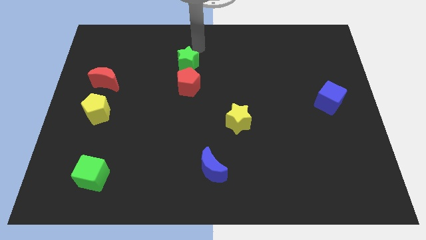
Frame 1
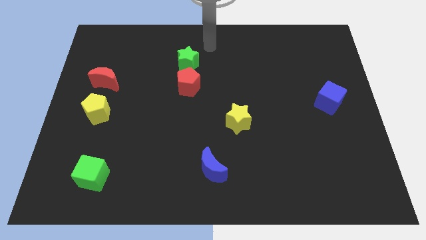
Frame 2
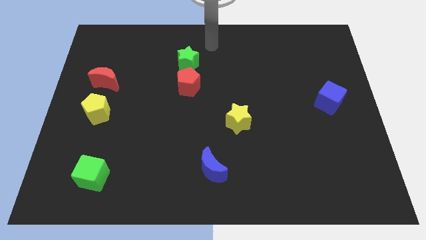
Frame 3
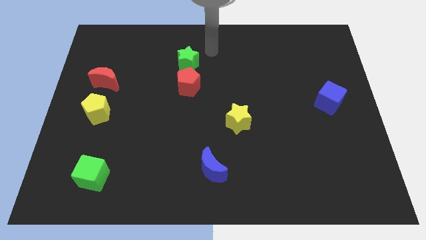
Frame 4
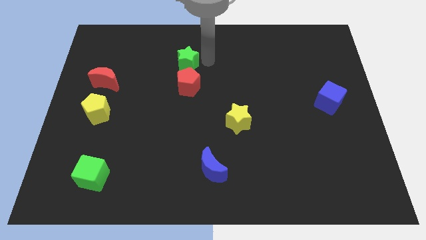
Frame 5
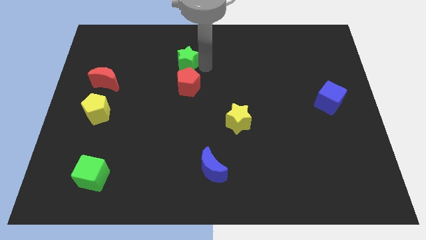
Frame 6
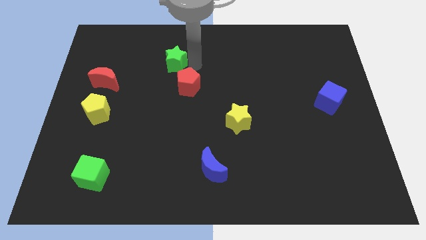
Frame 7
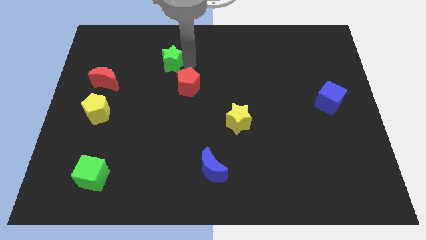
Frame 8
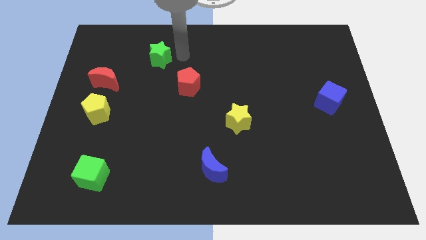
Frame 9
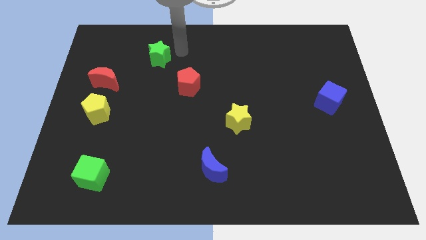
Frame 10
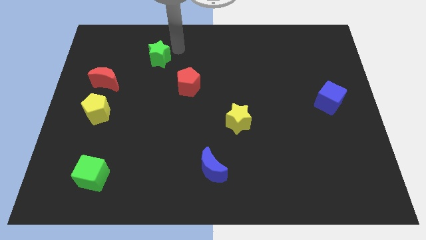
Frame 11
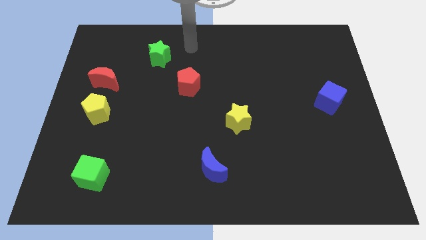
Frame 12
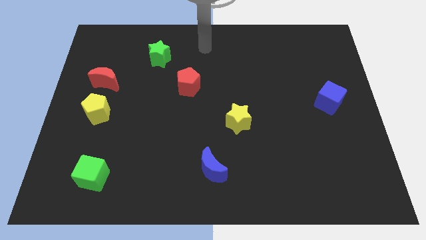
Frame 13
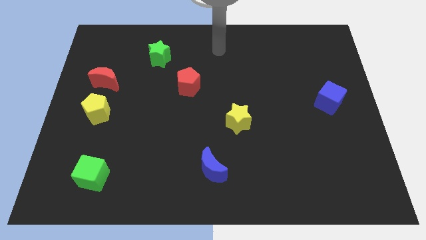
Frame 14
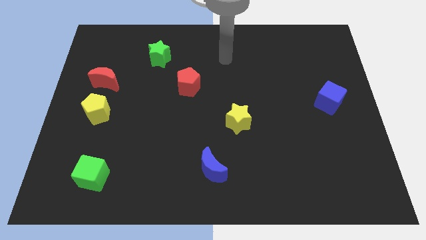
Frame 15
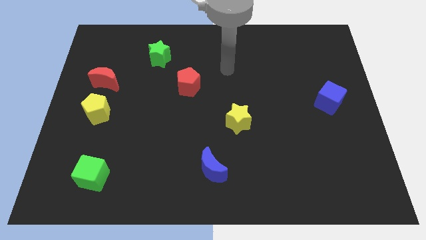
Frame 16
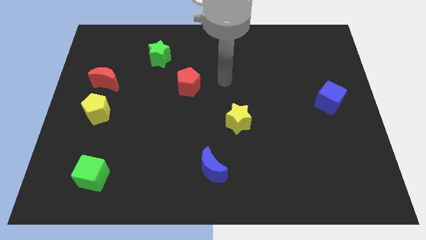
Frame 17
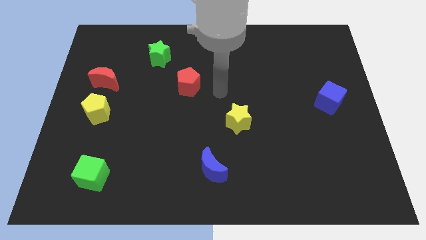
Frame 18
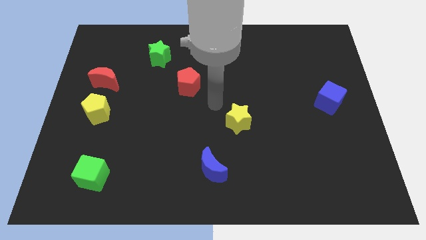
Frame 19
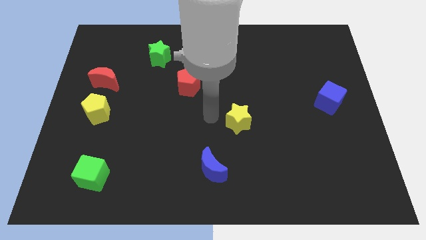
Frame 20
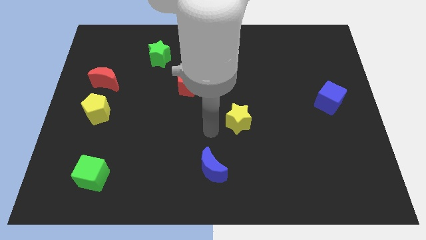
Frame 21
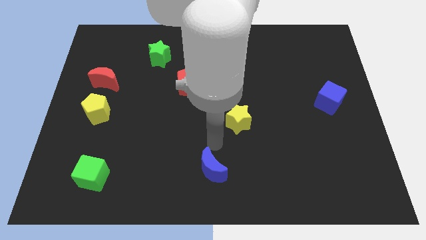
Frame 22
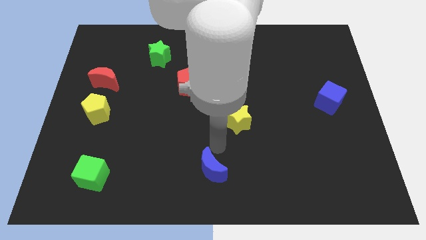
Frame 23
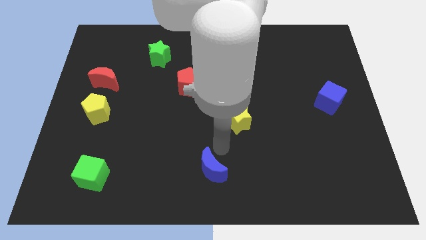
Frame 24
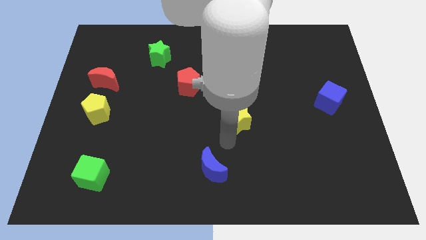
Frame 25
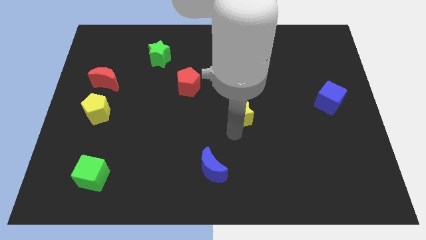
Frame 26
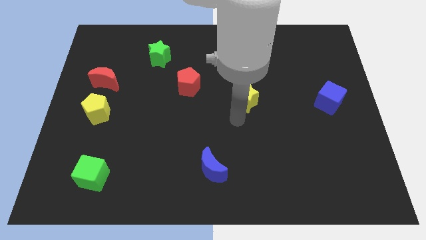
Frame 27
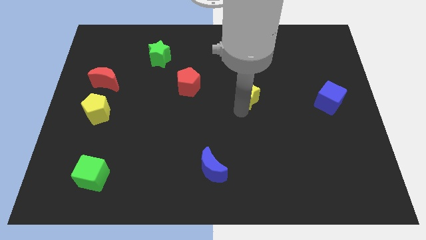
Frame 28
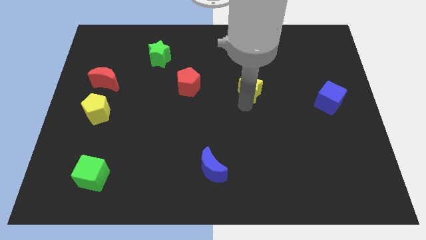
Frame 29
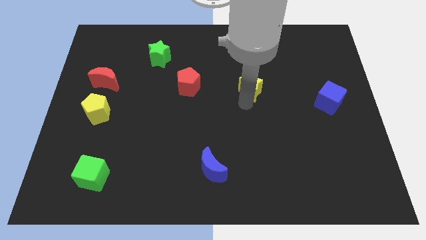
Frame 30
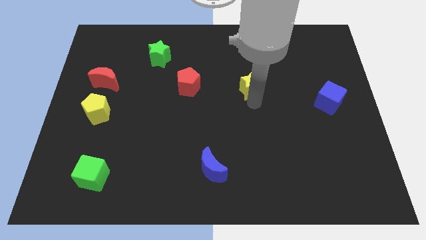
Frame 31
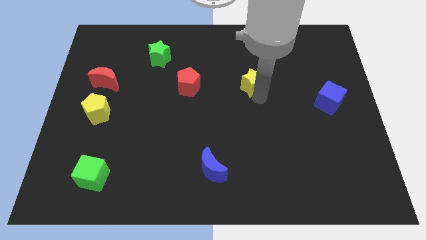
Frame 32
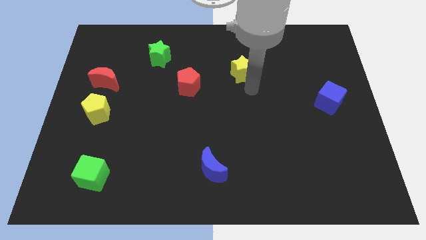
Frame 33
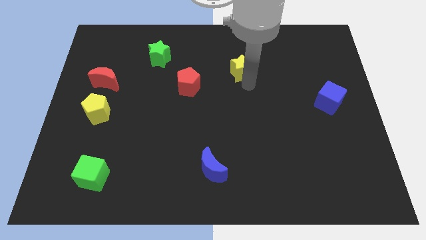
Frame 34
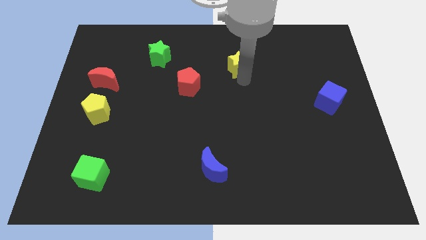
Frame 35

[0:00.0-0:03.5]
move the green star diagonal to the red pentagon

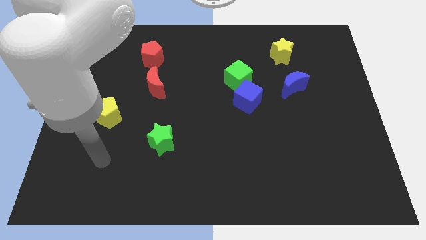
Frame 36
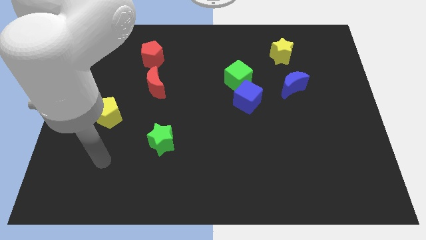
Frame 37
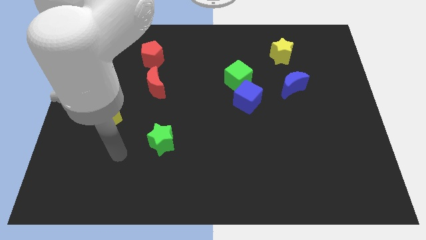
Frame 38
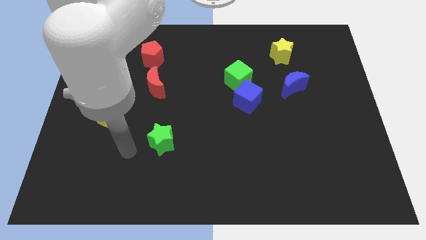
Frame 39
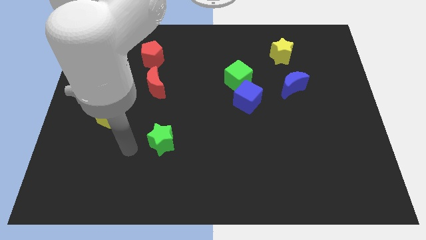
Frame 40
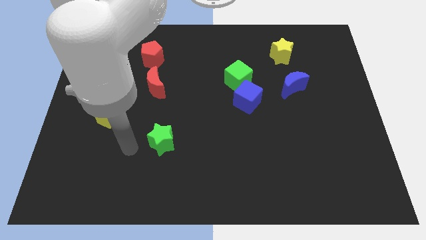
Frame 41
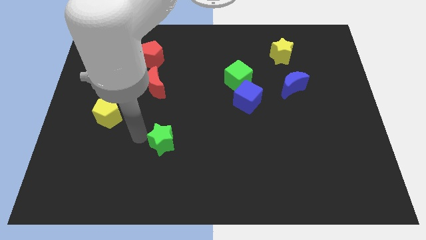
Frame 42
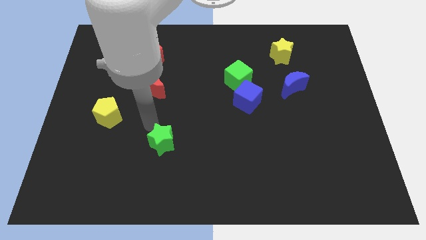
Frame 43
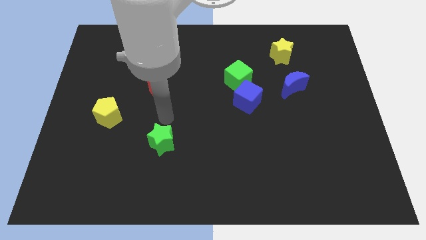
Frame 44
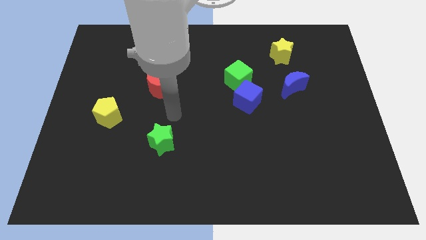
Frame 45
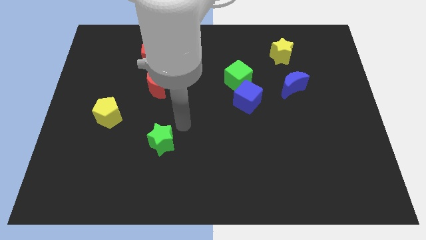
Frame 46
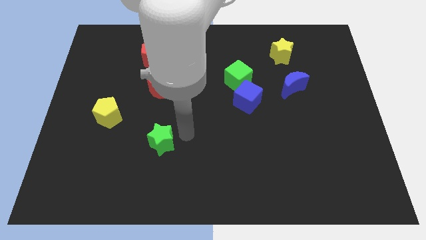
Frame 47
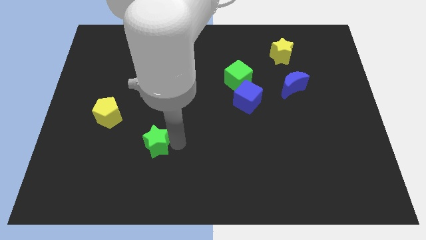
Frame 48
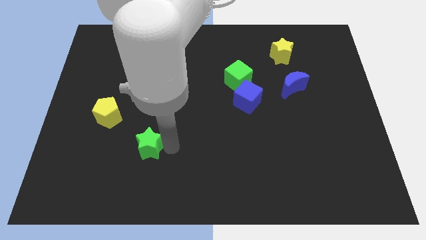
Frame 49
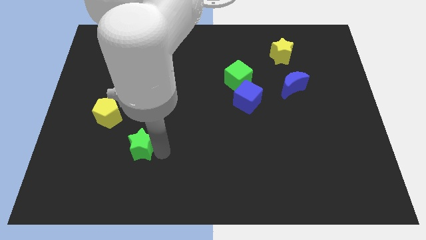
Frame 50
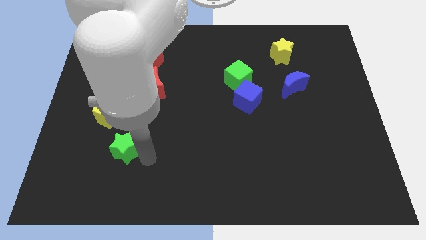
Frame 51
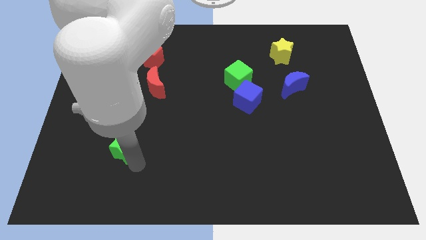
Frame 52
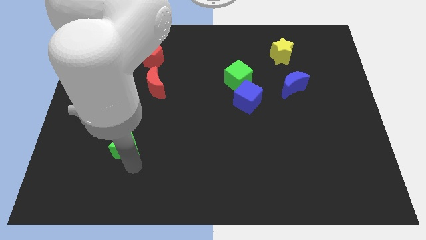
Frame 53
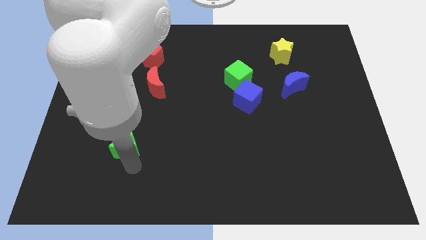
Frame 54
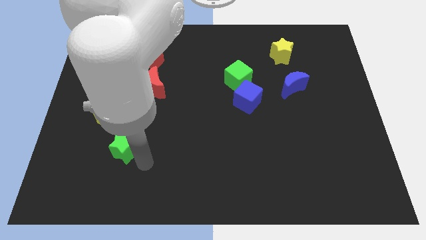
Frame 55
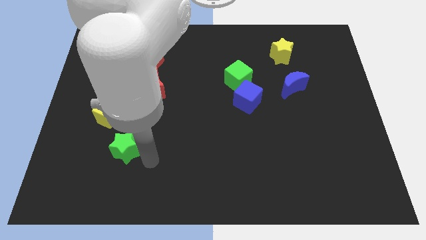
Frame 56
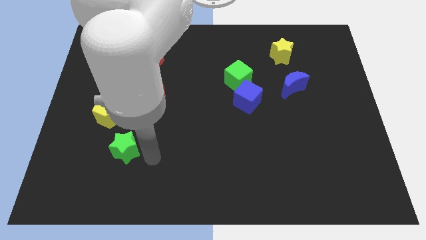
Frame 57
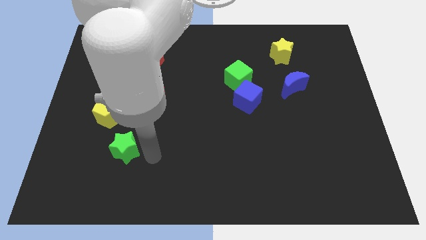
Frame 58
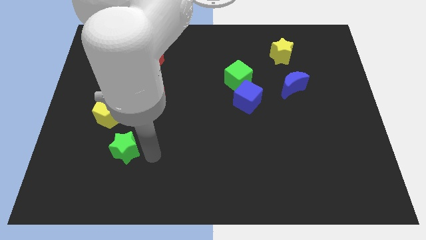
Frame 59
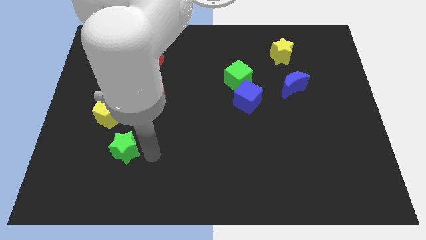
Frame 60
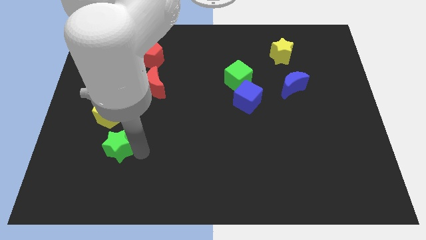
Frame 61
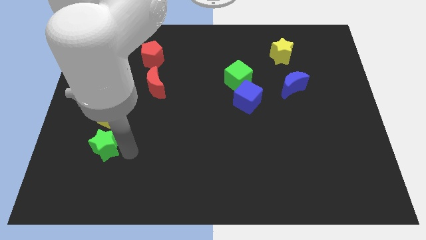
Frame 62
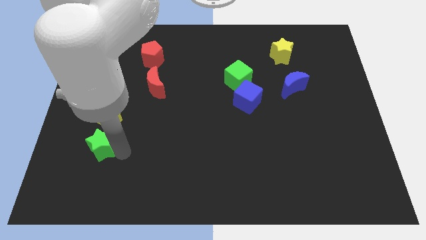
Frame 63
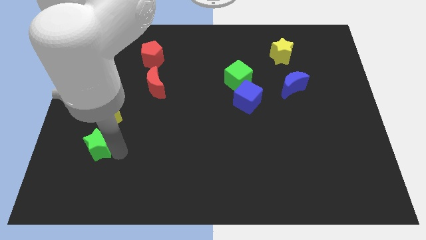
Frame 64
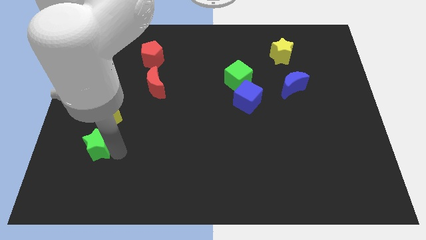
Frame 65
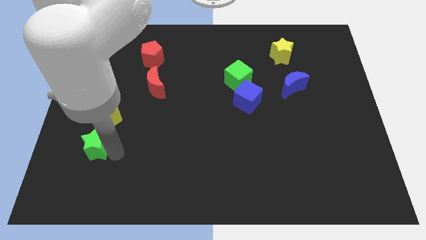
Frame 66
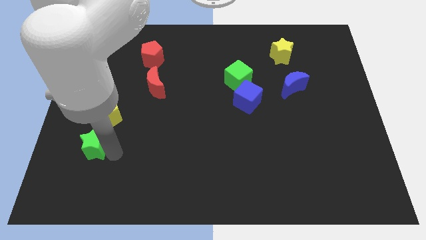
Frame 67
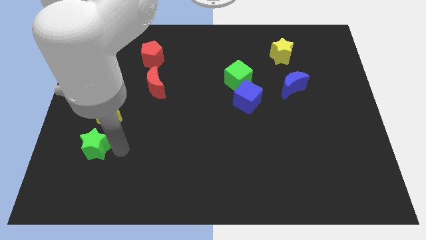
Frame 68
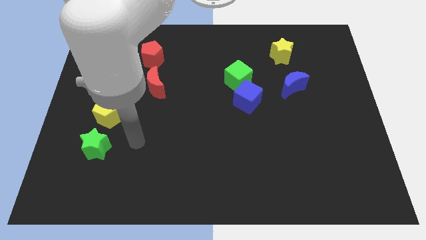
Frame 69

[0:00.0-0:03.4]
place the green star below the yellow pentagon

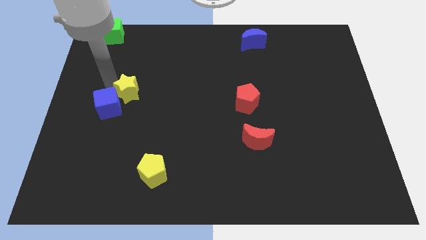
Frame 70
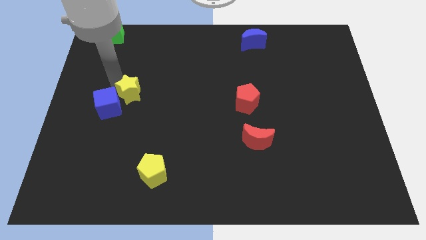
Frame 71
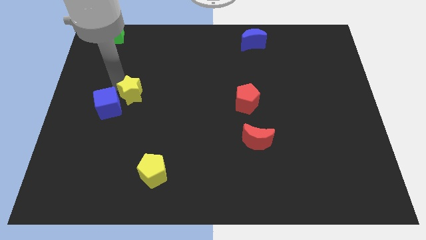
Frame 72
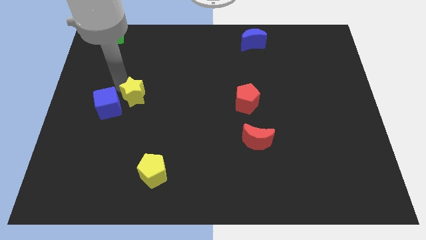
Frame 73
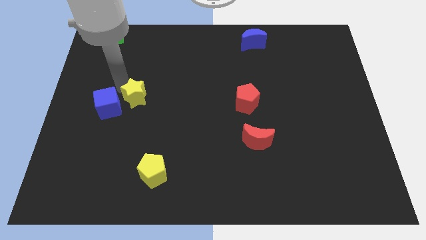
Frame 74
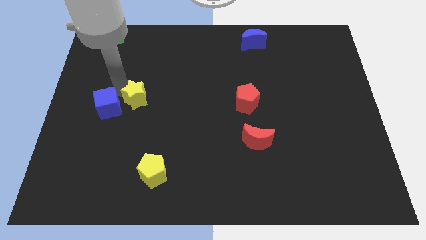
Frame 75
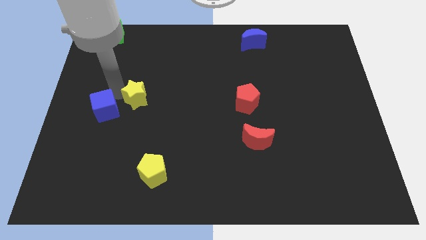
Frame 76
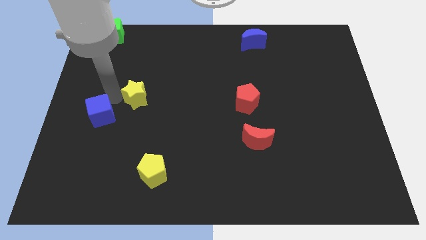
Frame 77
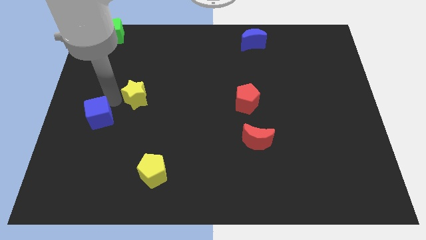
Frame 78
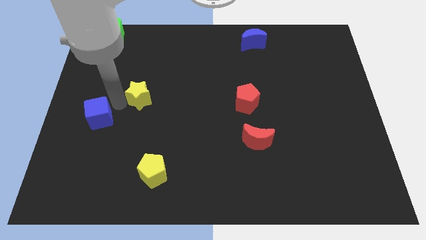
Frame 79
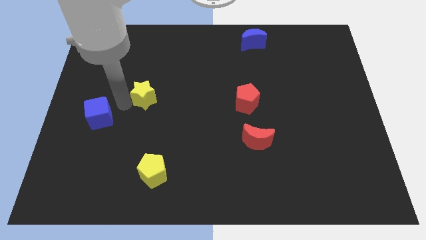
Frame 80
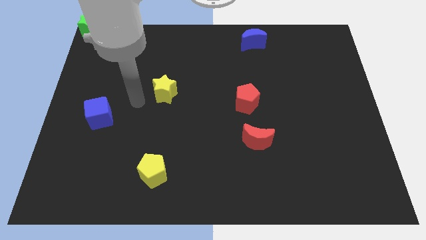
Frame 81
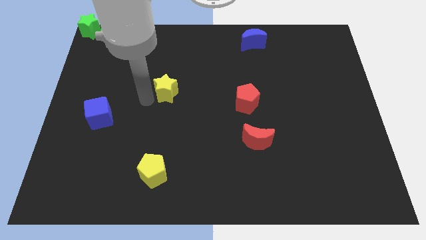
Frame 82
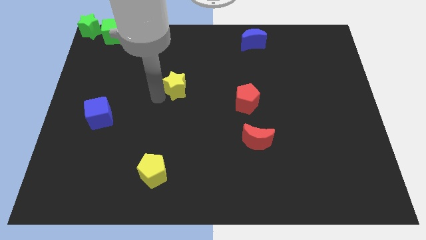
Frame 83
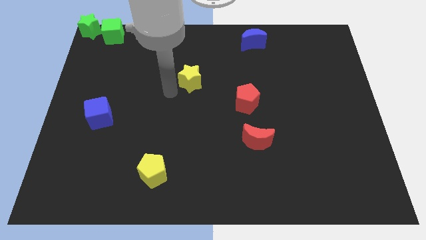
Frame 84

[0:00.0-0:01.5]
separate yellow star from the blue cube

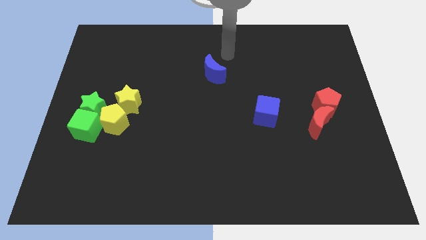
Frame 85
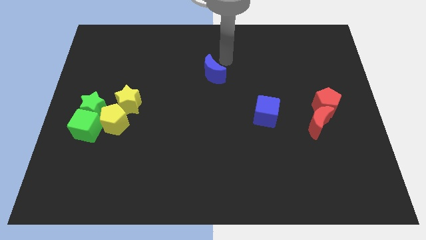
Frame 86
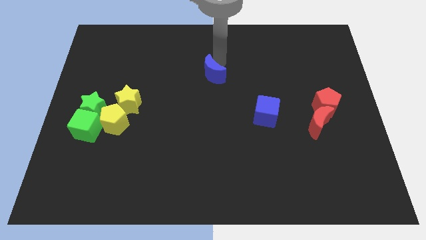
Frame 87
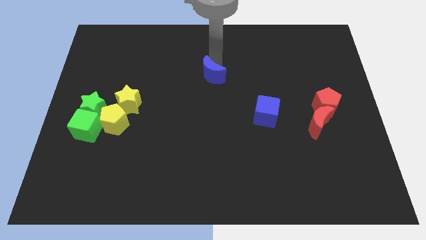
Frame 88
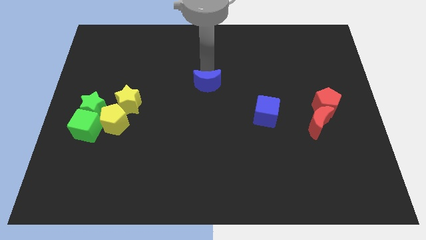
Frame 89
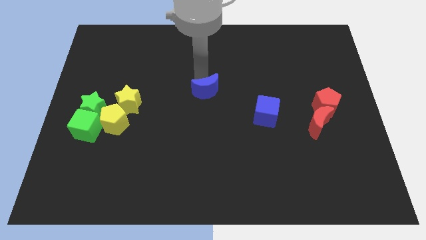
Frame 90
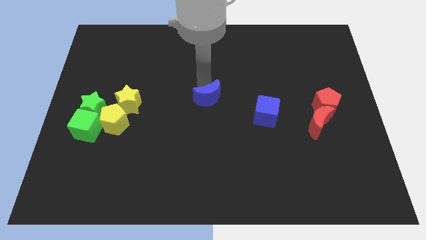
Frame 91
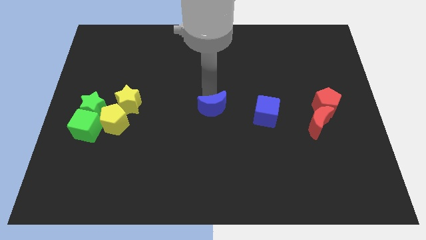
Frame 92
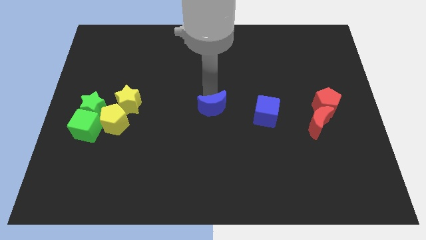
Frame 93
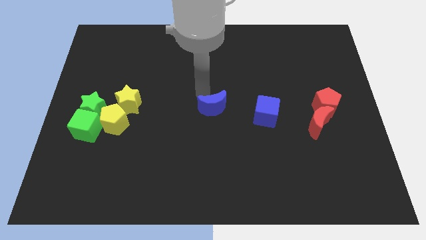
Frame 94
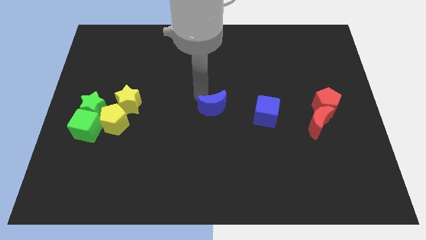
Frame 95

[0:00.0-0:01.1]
slide blue moon to the center
